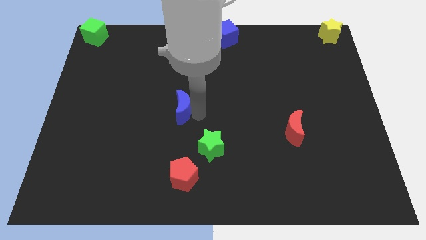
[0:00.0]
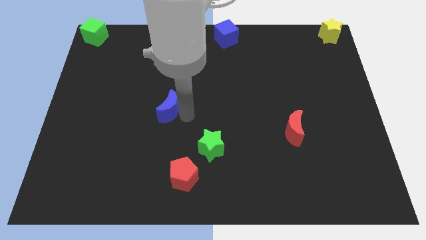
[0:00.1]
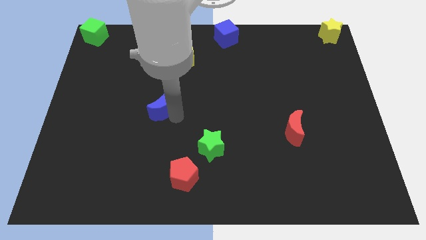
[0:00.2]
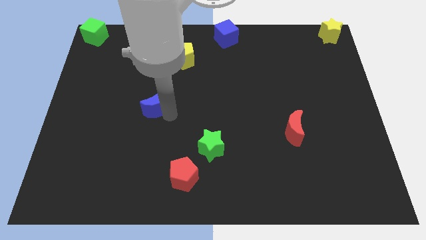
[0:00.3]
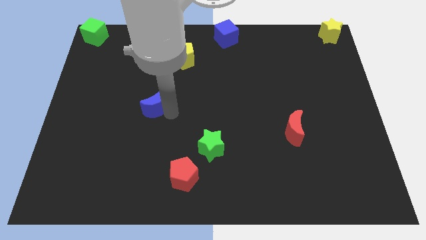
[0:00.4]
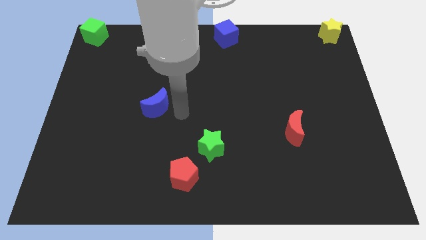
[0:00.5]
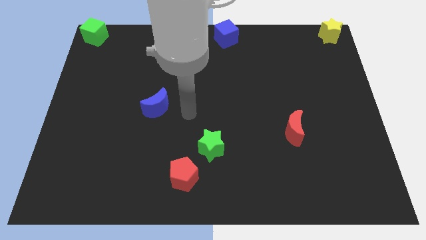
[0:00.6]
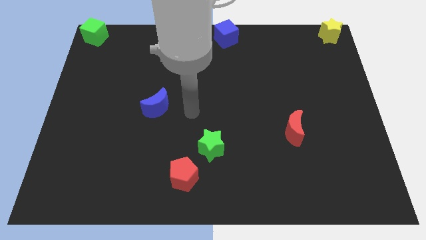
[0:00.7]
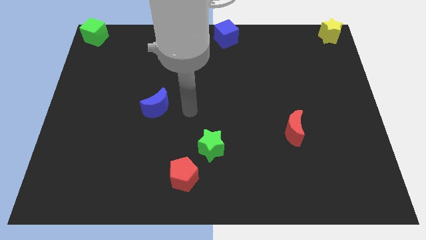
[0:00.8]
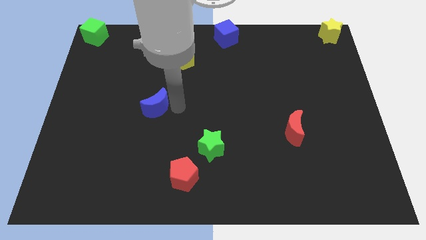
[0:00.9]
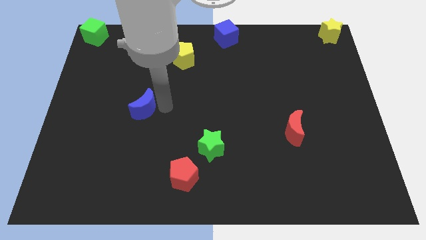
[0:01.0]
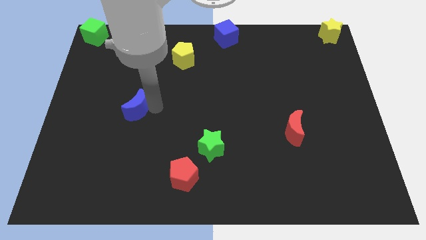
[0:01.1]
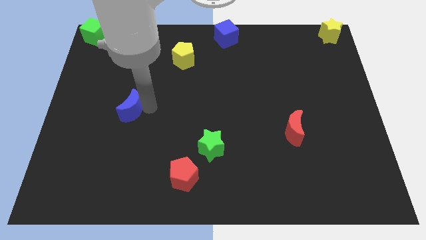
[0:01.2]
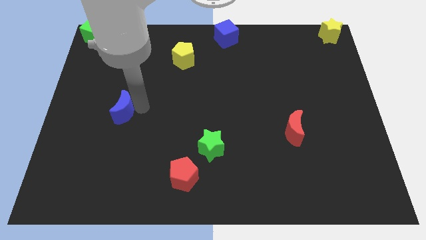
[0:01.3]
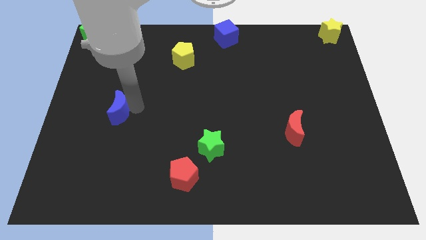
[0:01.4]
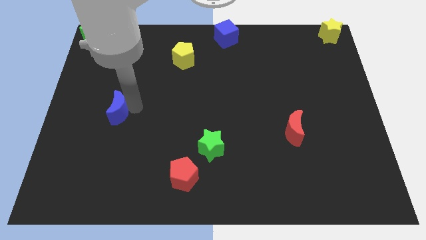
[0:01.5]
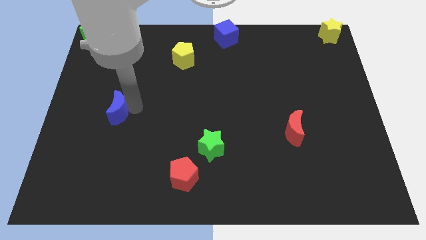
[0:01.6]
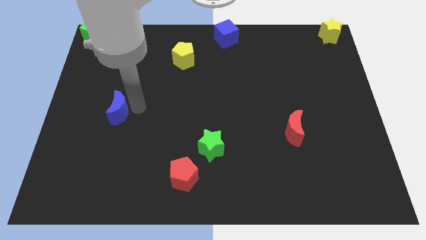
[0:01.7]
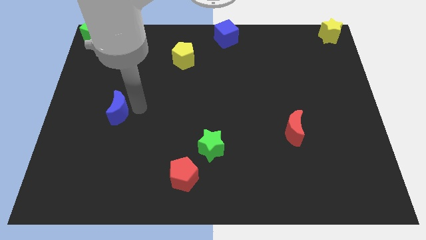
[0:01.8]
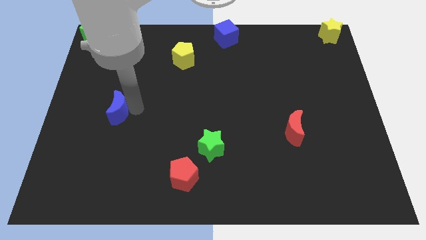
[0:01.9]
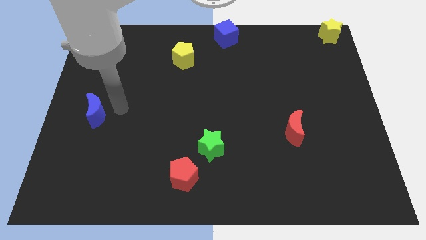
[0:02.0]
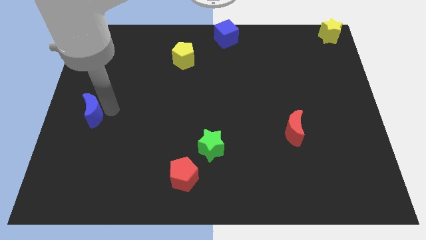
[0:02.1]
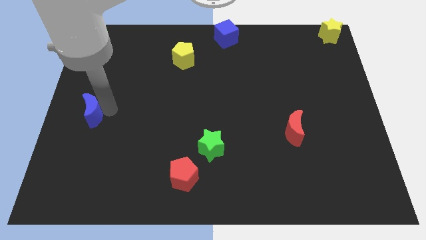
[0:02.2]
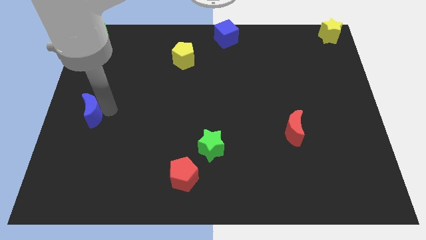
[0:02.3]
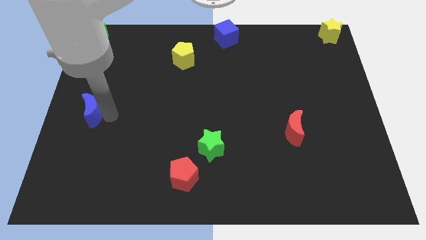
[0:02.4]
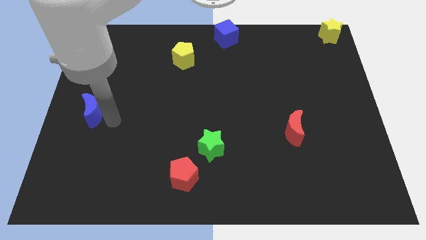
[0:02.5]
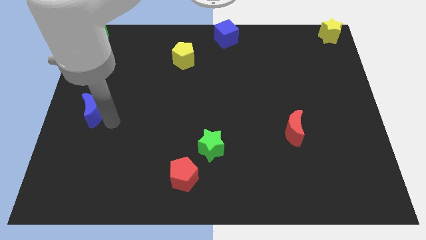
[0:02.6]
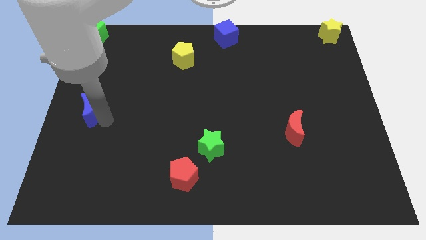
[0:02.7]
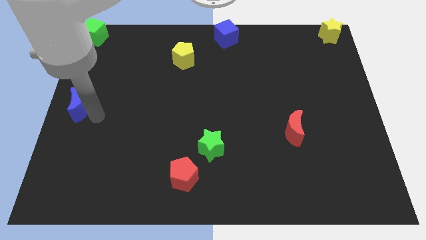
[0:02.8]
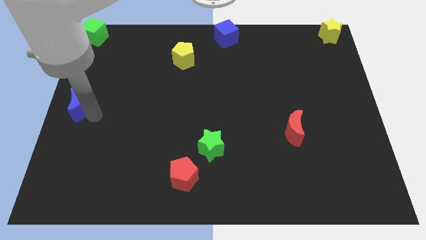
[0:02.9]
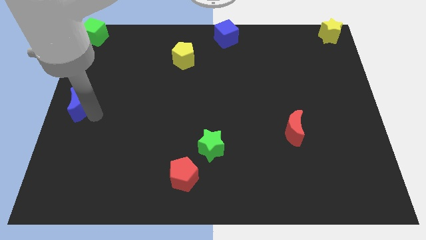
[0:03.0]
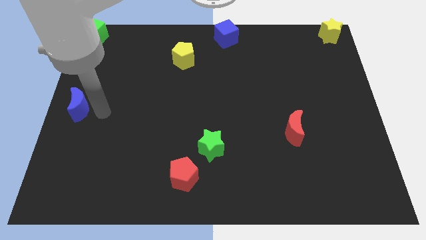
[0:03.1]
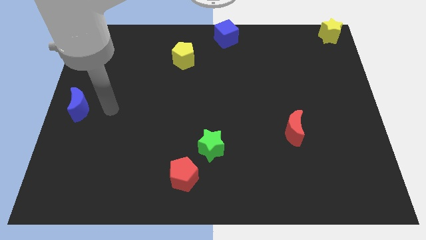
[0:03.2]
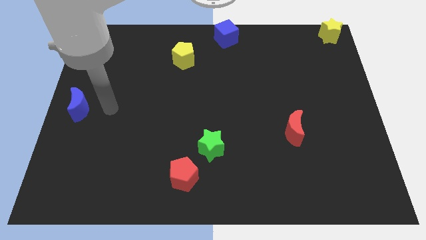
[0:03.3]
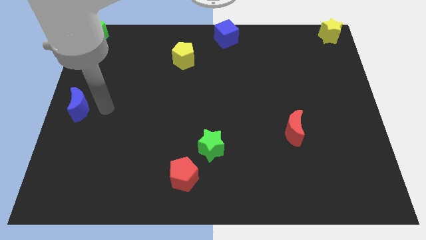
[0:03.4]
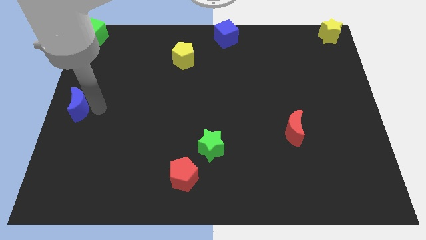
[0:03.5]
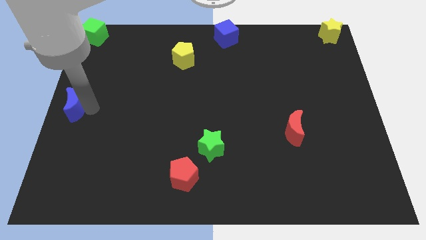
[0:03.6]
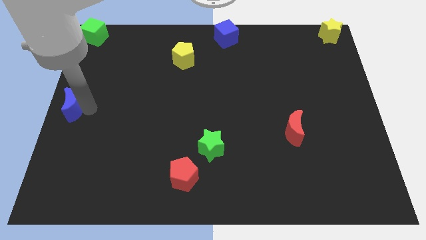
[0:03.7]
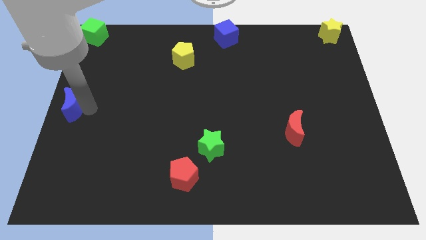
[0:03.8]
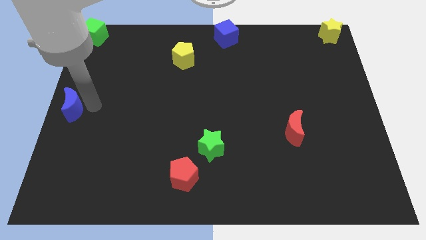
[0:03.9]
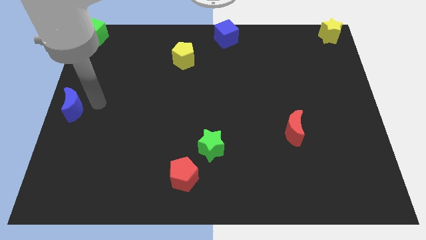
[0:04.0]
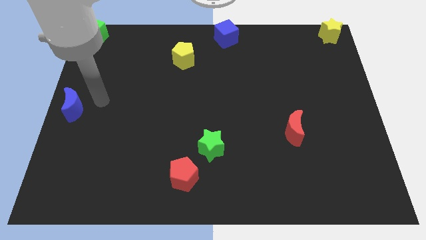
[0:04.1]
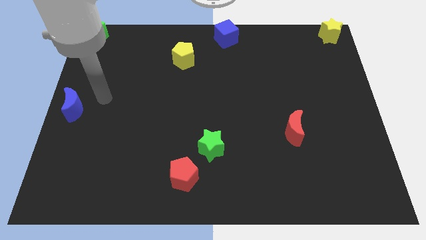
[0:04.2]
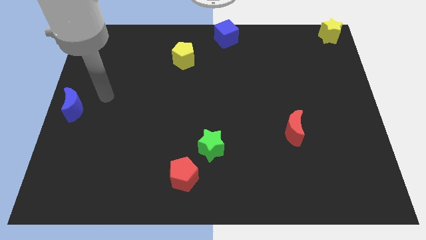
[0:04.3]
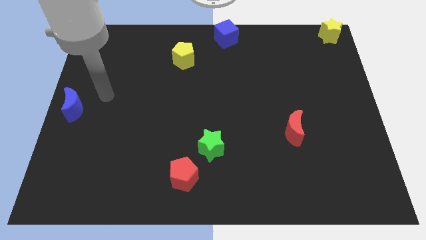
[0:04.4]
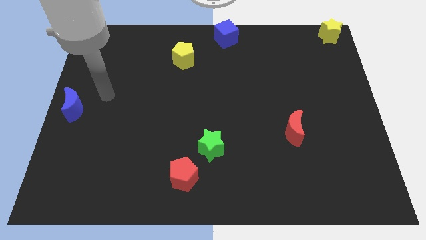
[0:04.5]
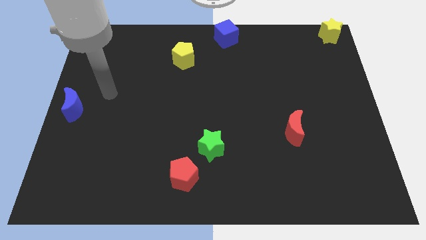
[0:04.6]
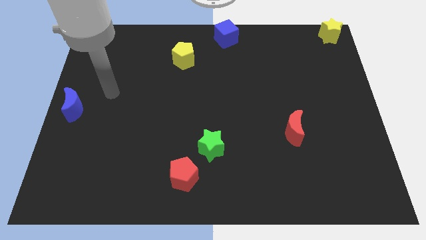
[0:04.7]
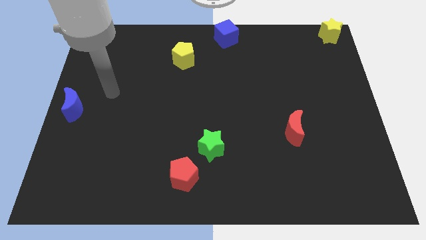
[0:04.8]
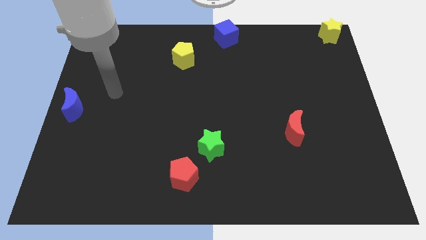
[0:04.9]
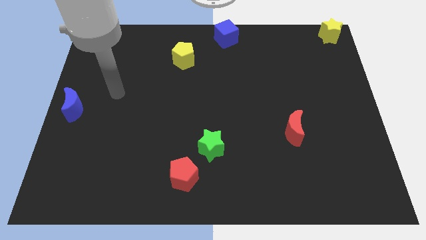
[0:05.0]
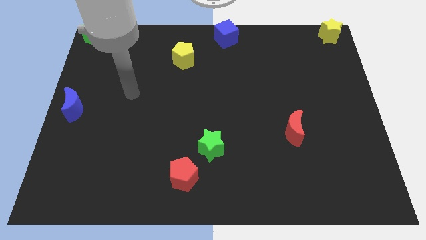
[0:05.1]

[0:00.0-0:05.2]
move the blue crescent towards the center left of the board

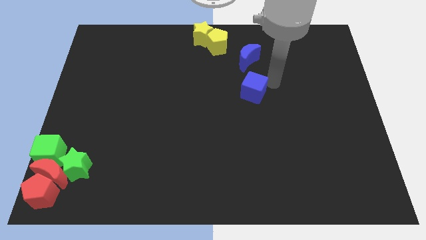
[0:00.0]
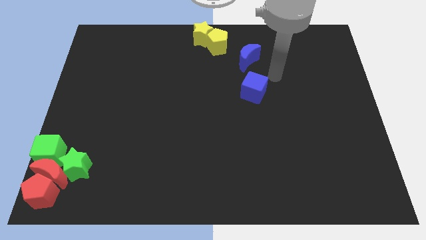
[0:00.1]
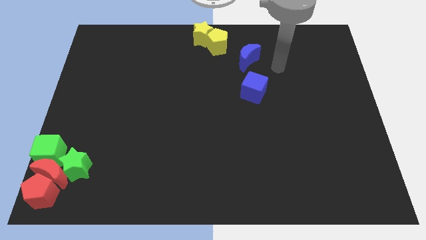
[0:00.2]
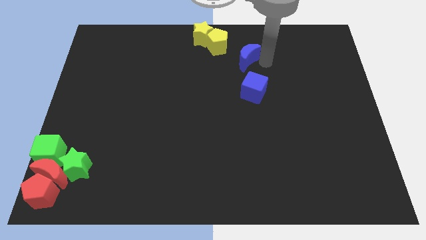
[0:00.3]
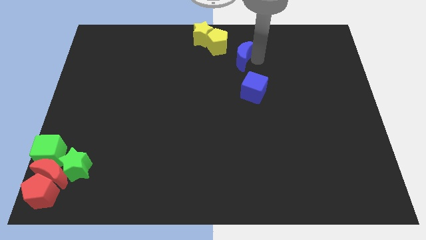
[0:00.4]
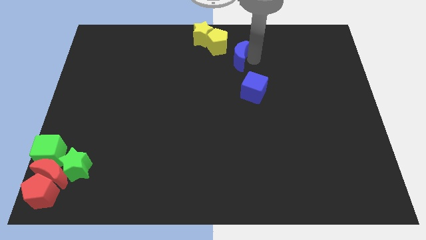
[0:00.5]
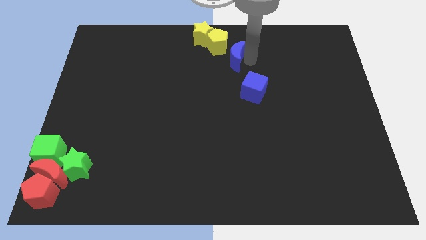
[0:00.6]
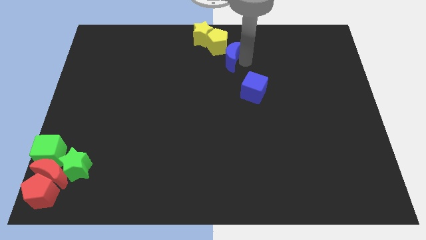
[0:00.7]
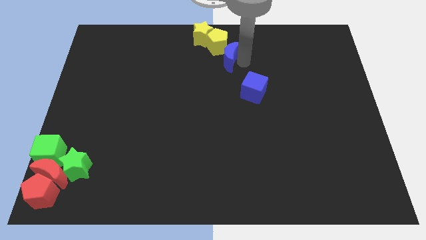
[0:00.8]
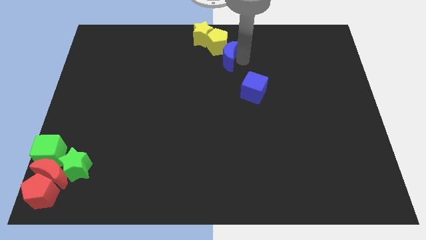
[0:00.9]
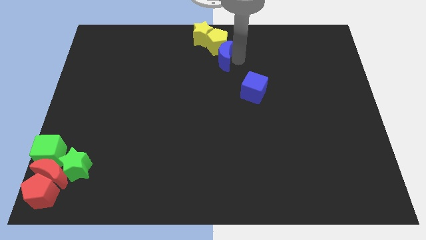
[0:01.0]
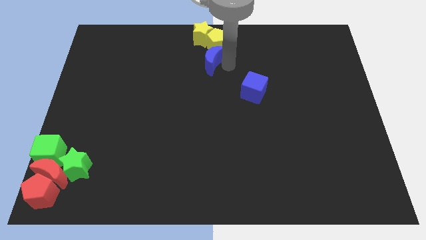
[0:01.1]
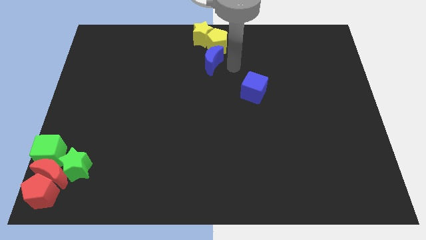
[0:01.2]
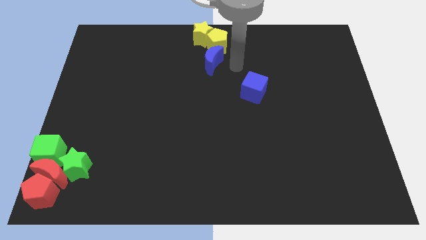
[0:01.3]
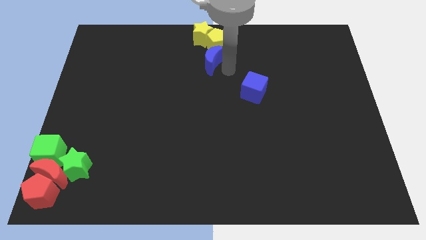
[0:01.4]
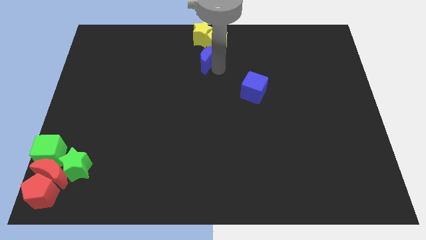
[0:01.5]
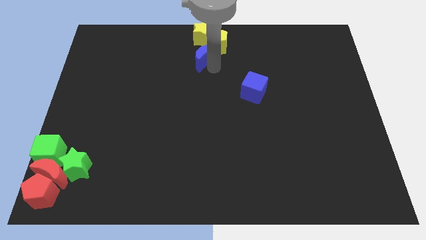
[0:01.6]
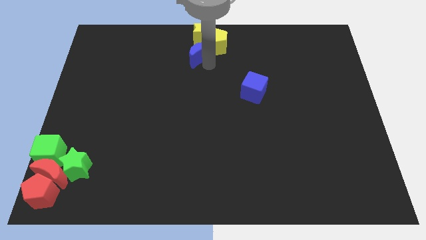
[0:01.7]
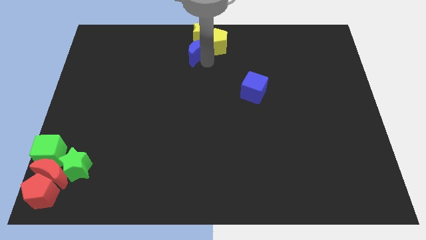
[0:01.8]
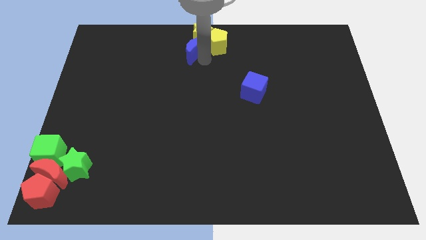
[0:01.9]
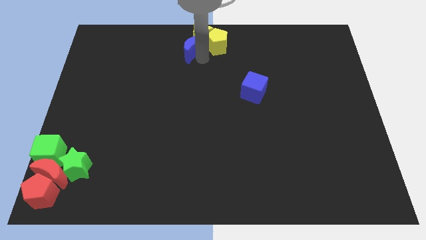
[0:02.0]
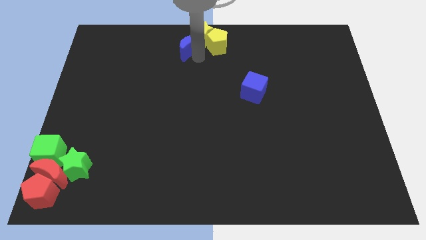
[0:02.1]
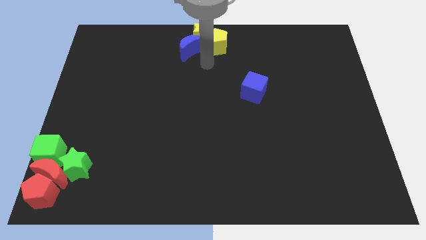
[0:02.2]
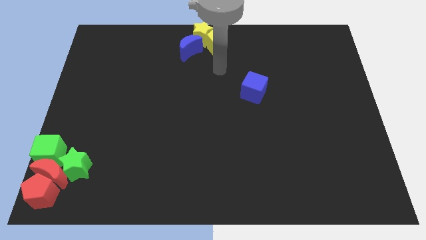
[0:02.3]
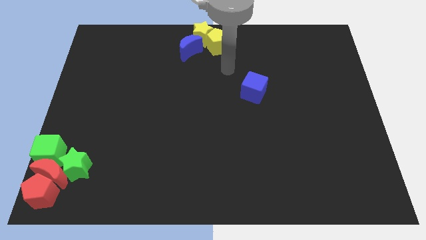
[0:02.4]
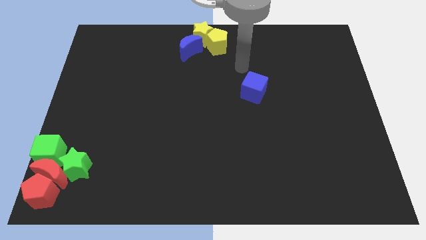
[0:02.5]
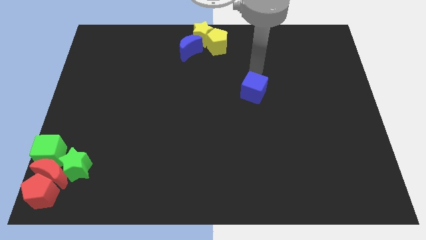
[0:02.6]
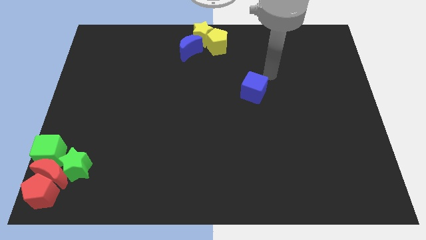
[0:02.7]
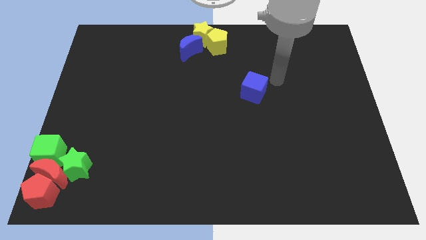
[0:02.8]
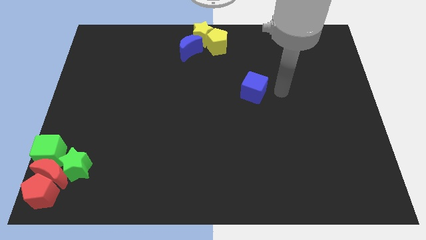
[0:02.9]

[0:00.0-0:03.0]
place the blue moon at the top center

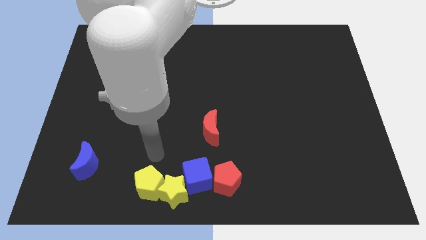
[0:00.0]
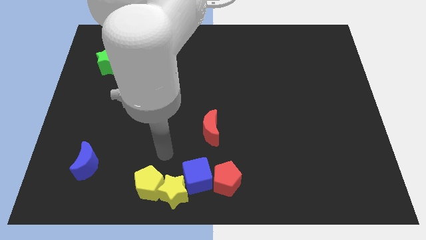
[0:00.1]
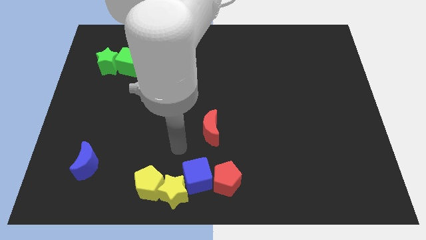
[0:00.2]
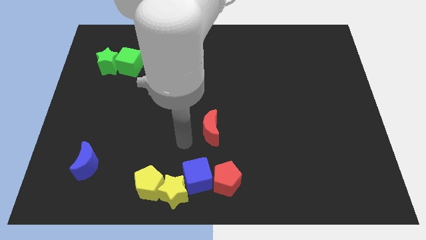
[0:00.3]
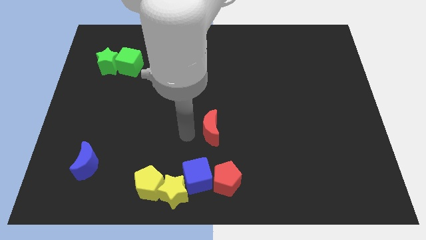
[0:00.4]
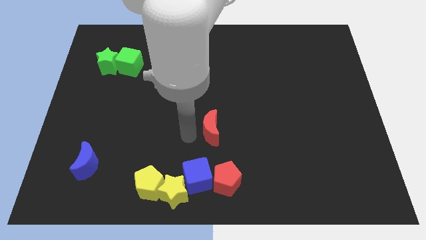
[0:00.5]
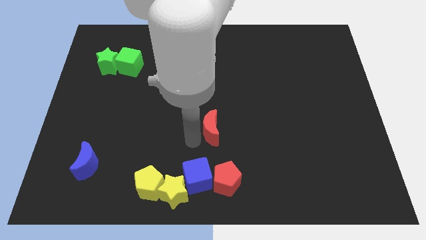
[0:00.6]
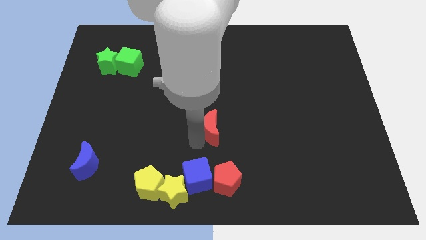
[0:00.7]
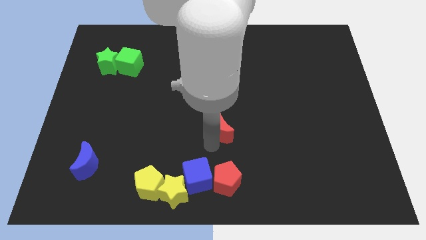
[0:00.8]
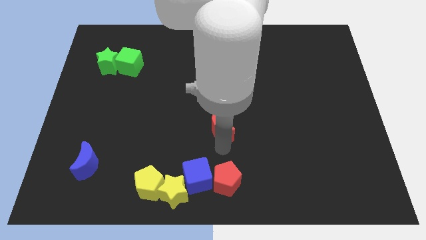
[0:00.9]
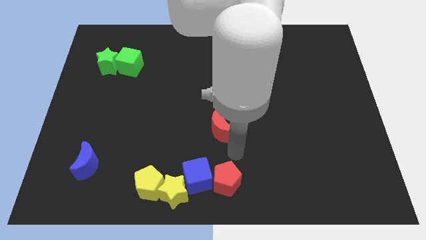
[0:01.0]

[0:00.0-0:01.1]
tap the red crescent
